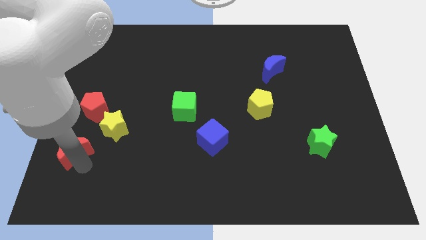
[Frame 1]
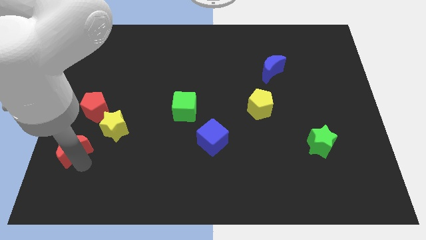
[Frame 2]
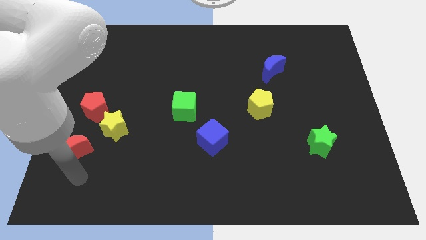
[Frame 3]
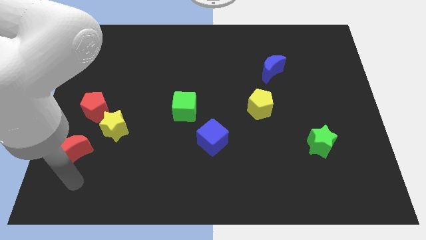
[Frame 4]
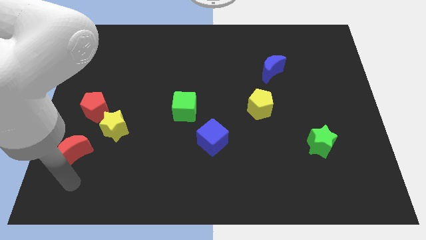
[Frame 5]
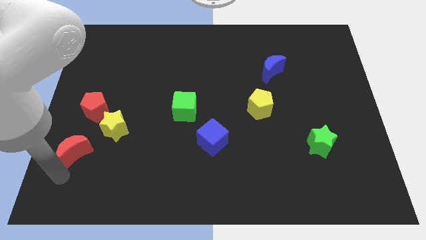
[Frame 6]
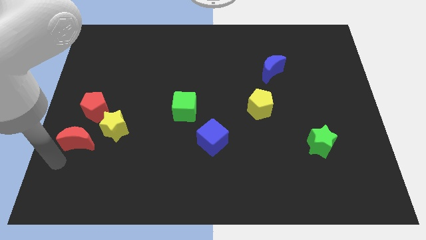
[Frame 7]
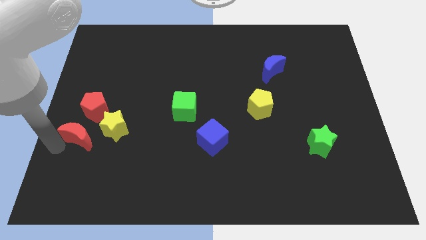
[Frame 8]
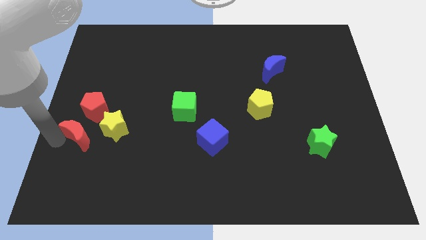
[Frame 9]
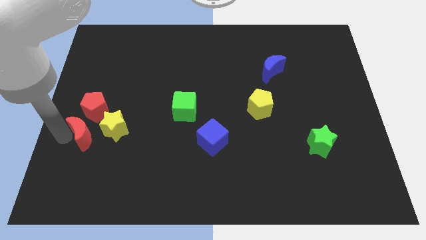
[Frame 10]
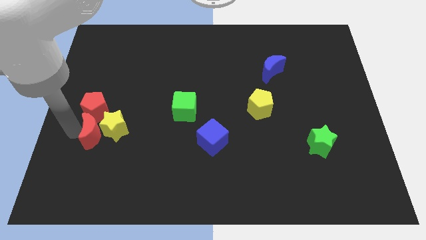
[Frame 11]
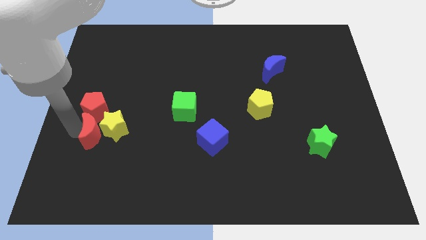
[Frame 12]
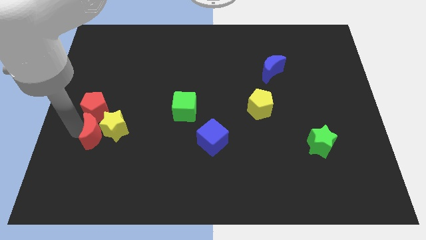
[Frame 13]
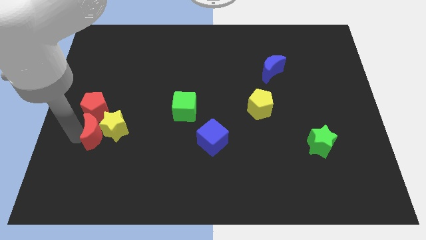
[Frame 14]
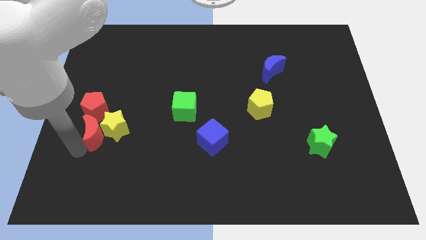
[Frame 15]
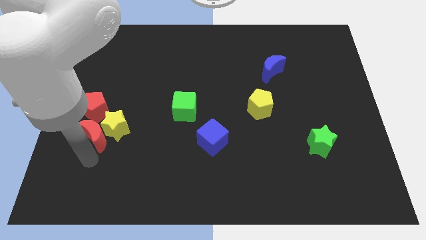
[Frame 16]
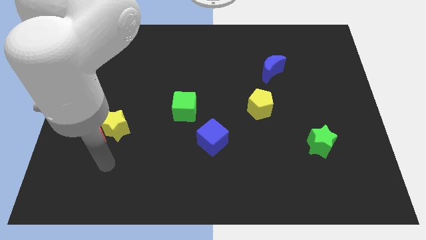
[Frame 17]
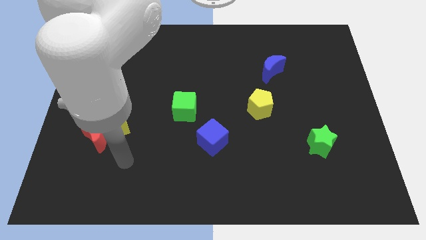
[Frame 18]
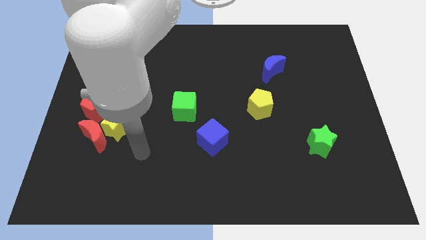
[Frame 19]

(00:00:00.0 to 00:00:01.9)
place the red crescent close to the yellow star

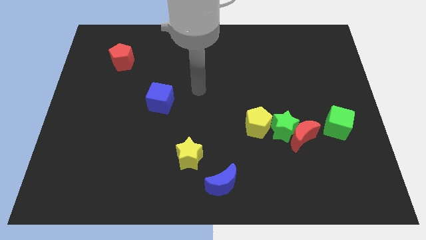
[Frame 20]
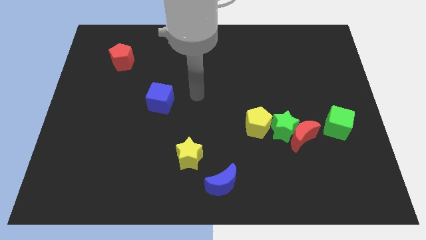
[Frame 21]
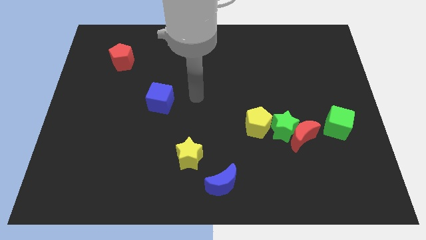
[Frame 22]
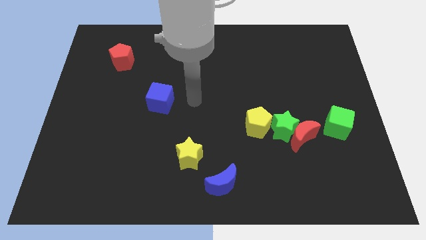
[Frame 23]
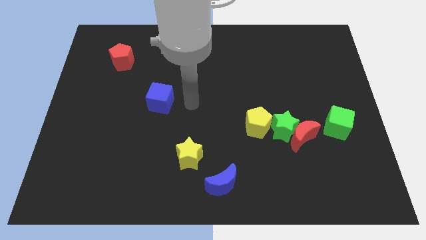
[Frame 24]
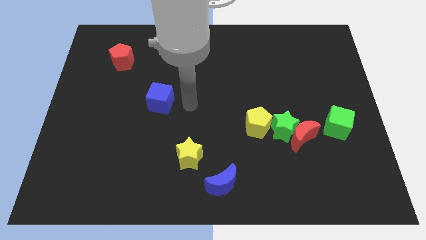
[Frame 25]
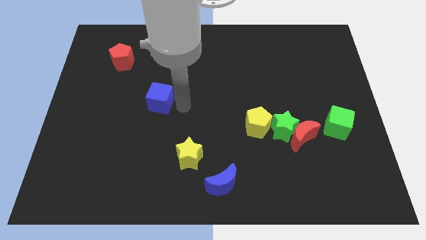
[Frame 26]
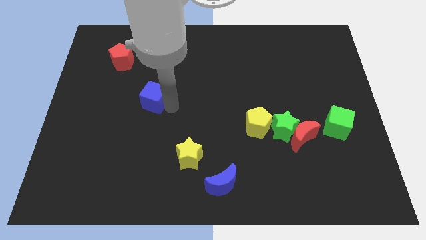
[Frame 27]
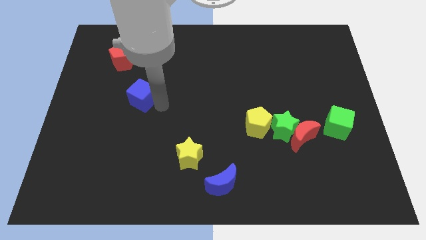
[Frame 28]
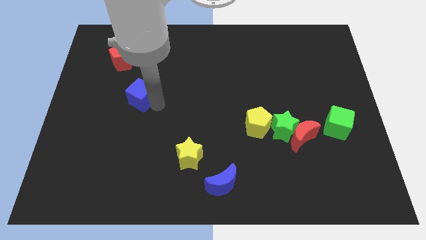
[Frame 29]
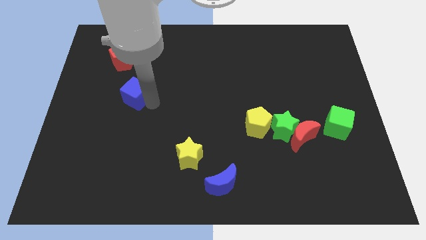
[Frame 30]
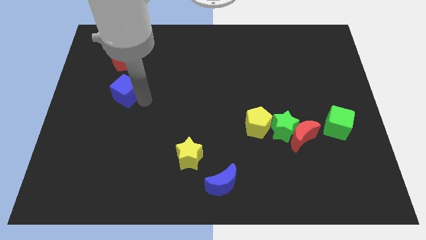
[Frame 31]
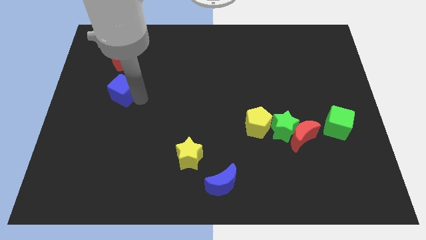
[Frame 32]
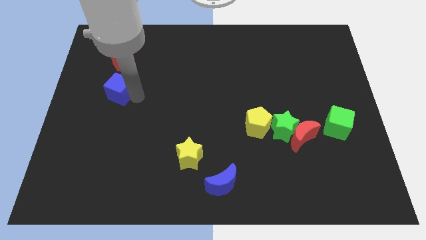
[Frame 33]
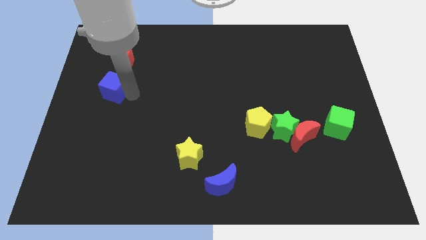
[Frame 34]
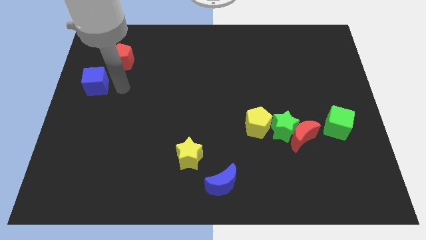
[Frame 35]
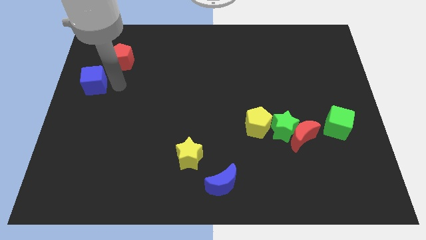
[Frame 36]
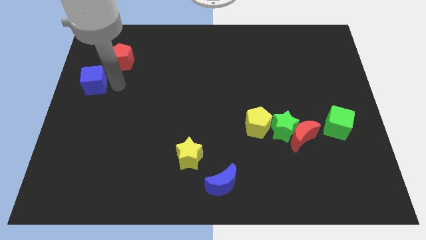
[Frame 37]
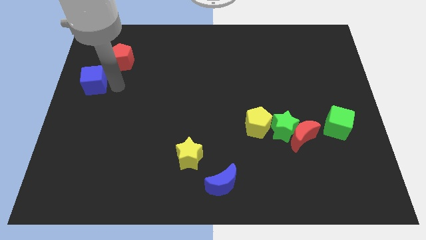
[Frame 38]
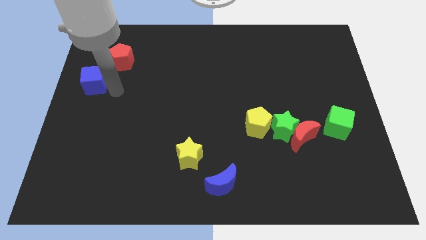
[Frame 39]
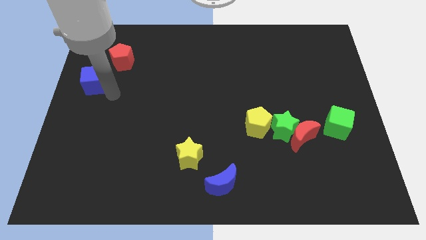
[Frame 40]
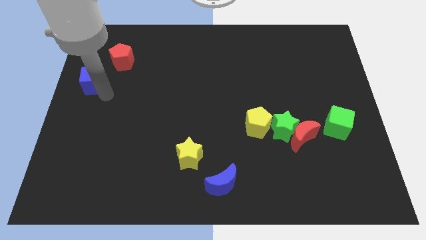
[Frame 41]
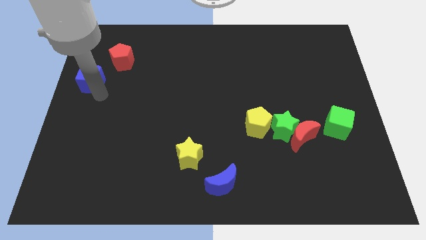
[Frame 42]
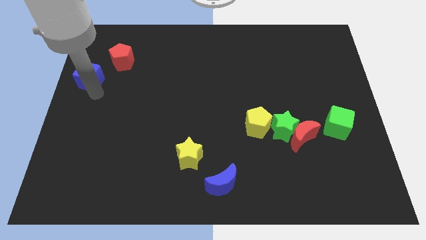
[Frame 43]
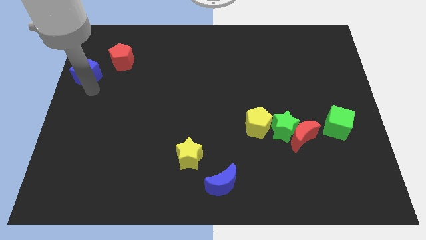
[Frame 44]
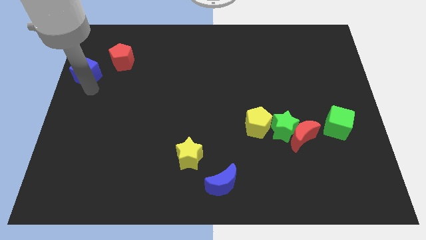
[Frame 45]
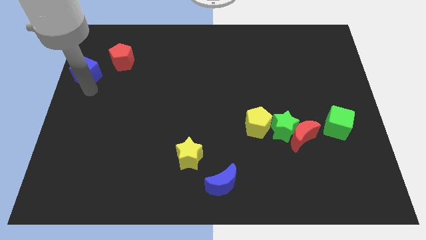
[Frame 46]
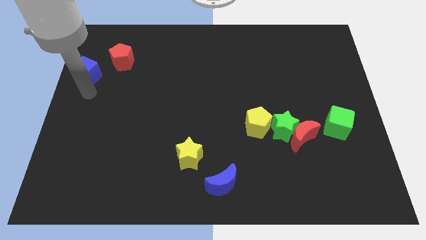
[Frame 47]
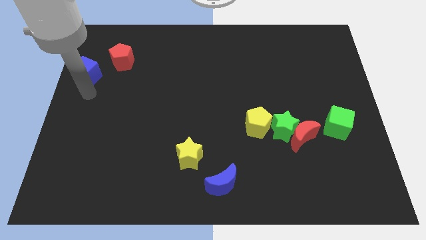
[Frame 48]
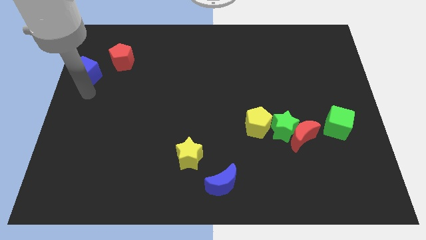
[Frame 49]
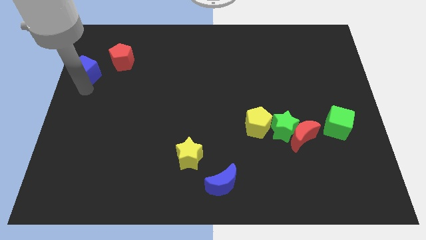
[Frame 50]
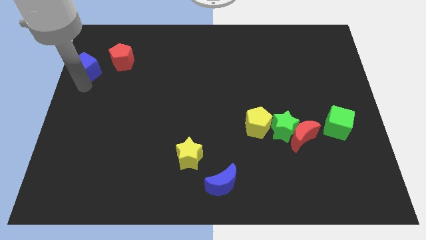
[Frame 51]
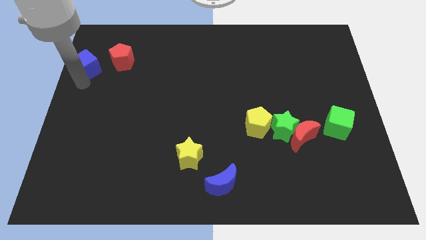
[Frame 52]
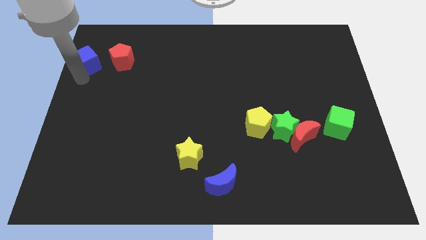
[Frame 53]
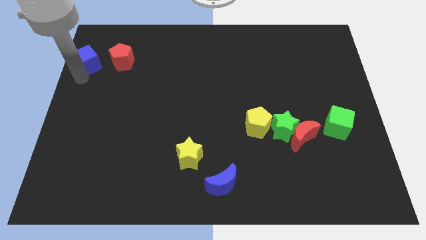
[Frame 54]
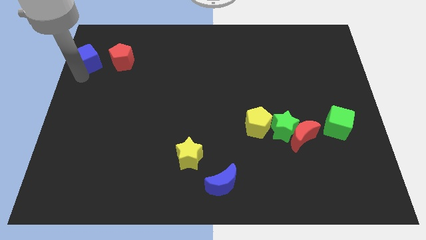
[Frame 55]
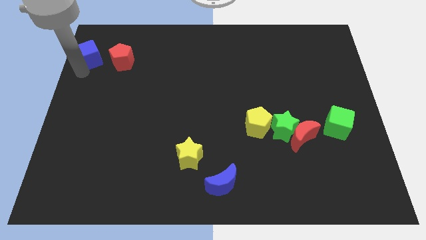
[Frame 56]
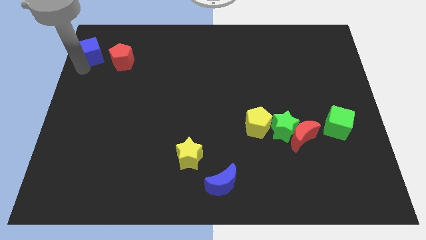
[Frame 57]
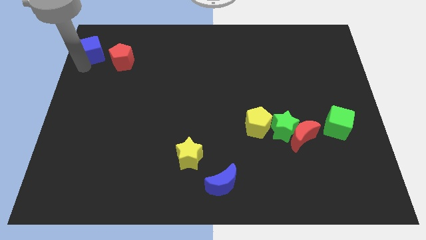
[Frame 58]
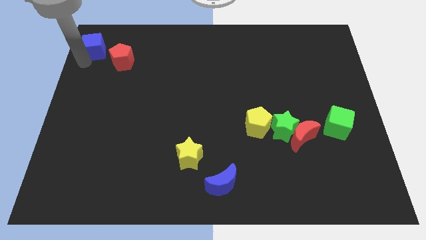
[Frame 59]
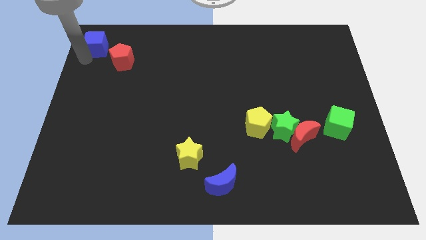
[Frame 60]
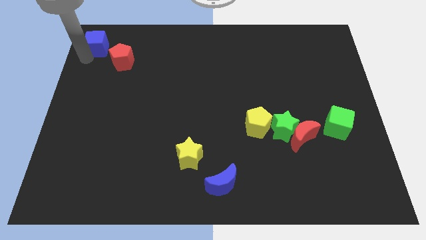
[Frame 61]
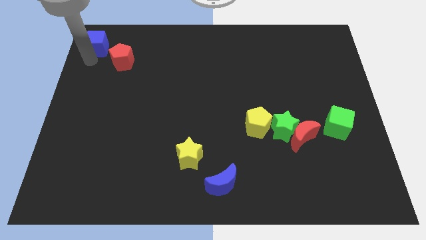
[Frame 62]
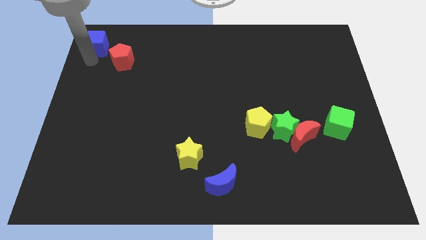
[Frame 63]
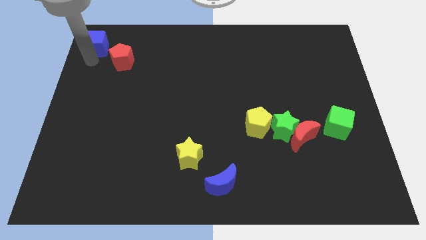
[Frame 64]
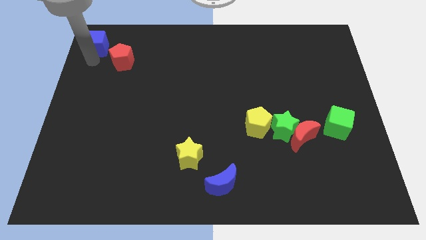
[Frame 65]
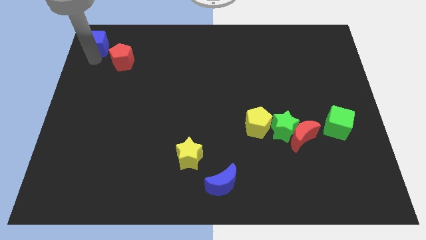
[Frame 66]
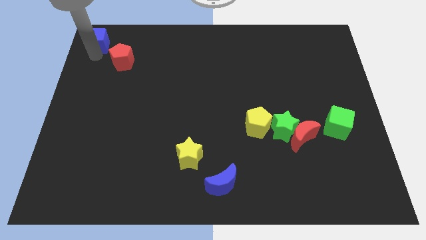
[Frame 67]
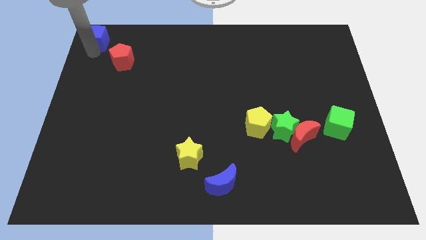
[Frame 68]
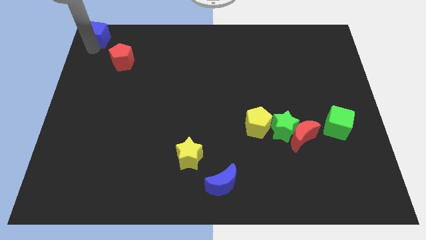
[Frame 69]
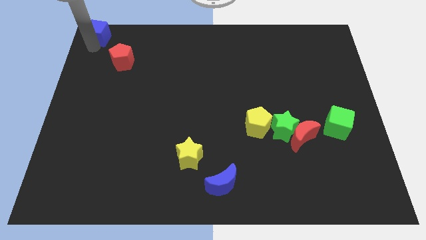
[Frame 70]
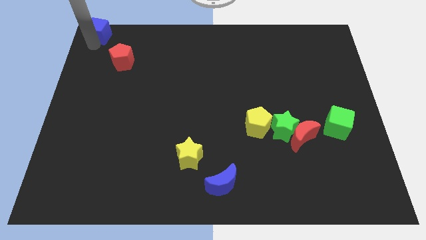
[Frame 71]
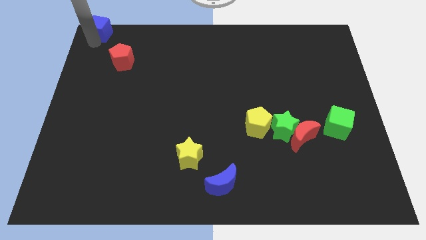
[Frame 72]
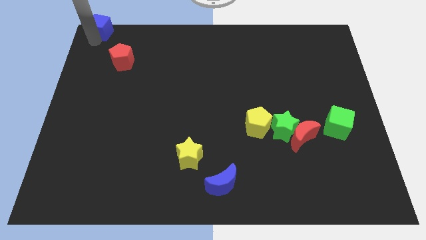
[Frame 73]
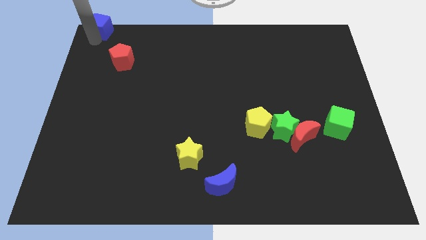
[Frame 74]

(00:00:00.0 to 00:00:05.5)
move the blue cube to the top left corner of the board

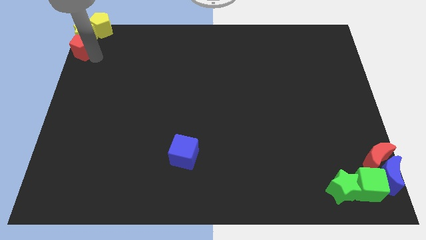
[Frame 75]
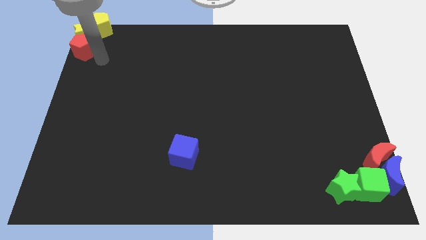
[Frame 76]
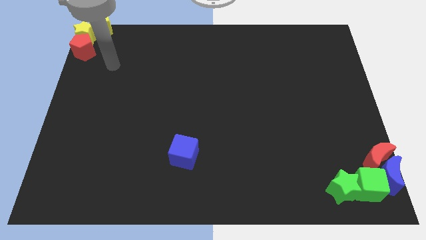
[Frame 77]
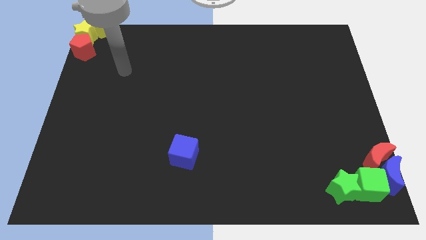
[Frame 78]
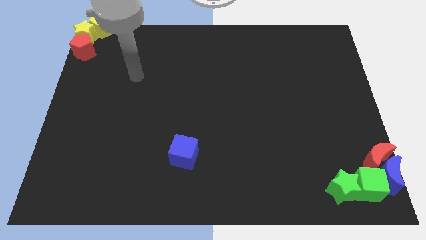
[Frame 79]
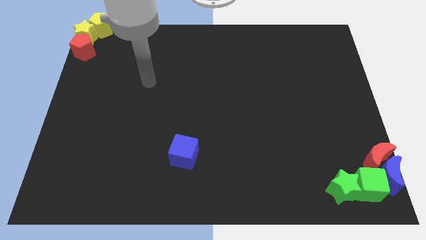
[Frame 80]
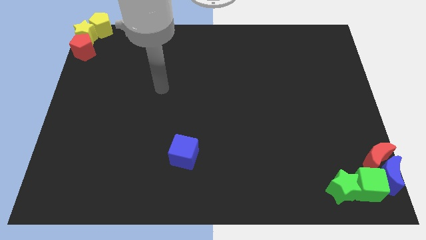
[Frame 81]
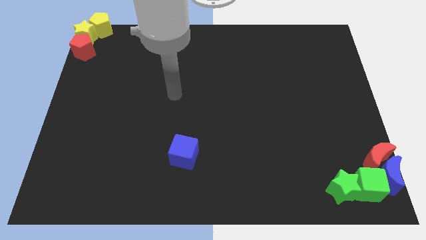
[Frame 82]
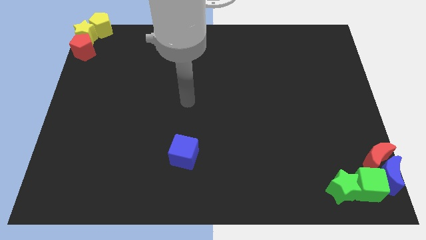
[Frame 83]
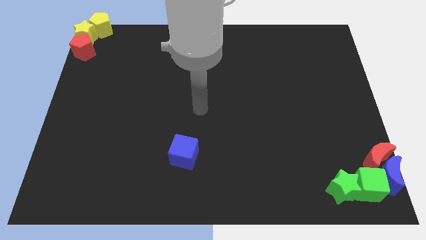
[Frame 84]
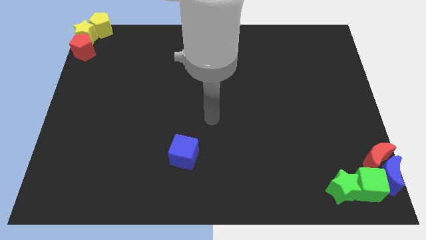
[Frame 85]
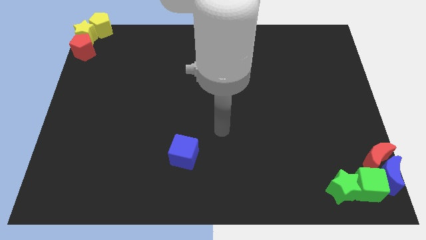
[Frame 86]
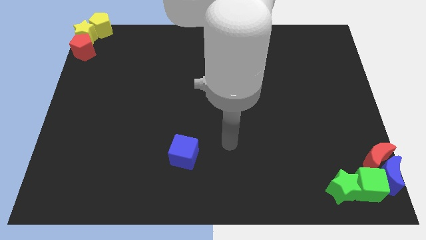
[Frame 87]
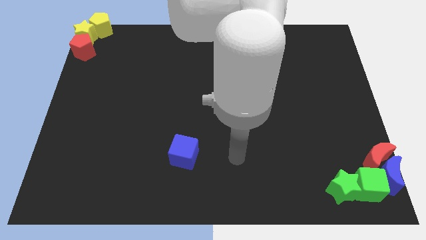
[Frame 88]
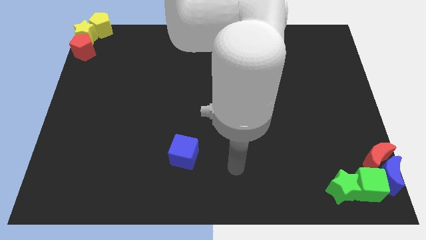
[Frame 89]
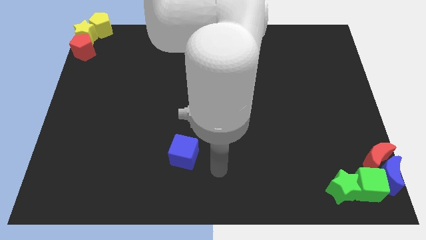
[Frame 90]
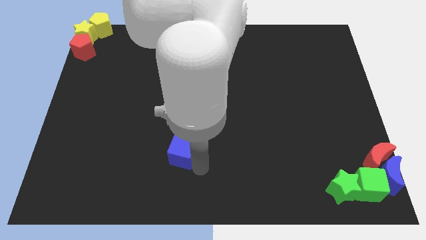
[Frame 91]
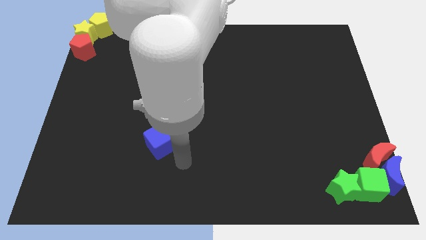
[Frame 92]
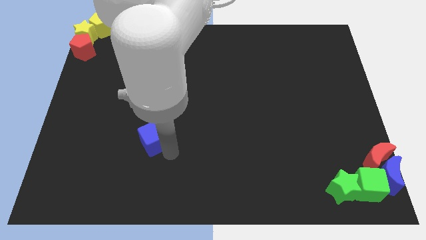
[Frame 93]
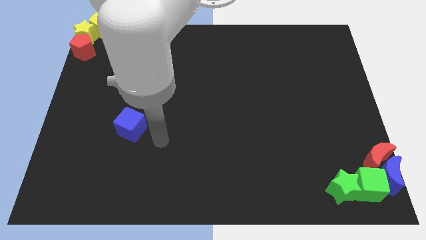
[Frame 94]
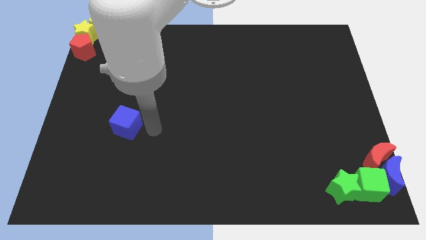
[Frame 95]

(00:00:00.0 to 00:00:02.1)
move your towards blue cube
